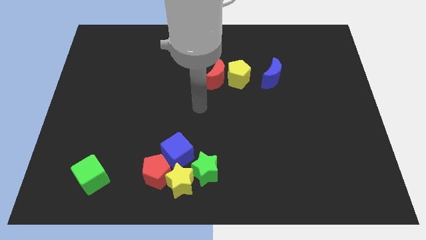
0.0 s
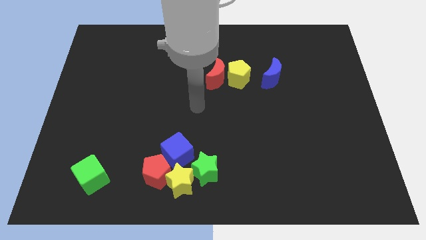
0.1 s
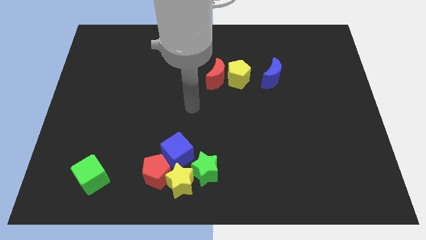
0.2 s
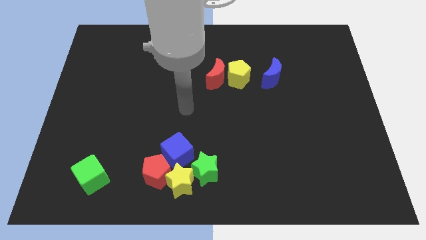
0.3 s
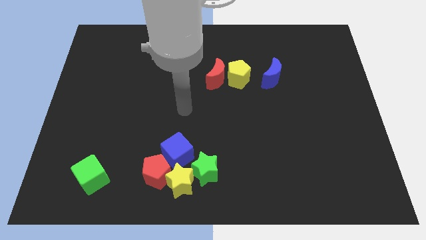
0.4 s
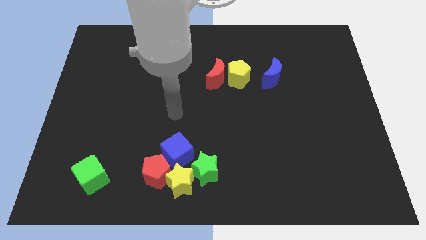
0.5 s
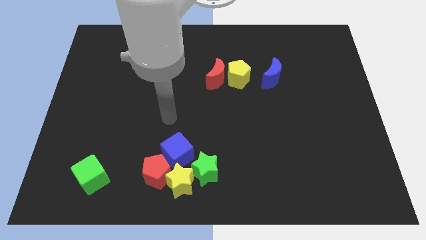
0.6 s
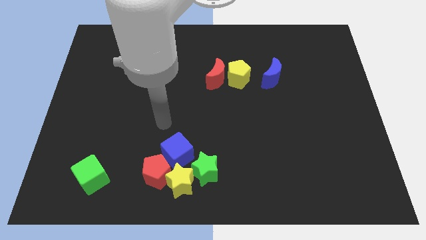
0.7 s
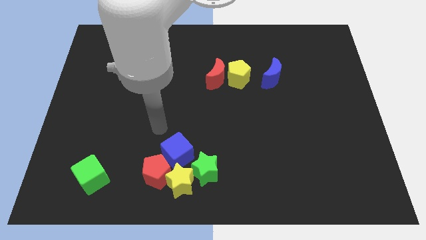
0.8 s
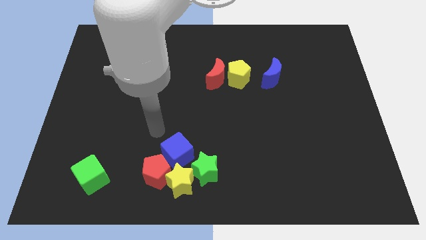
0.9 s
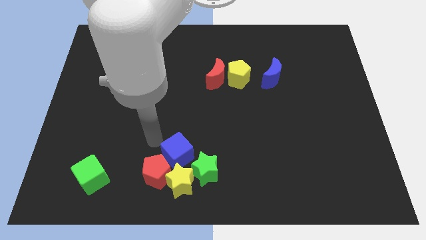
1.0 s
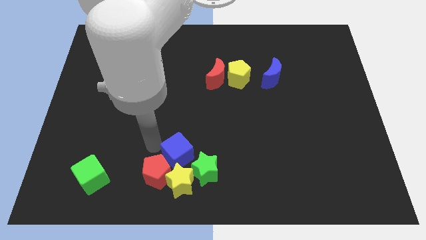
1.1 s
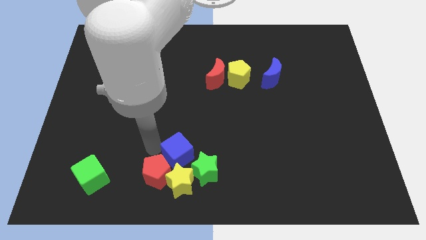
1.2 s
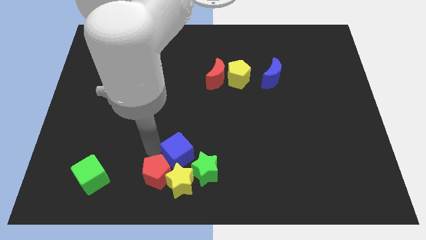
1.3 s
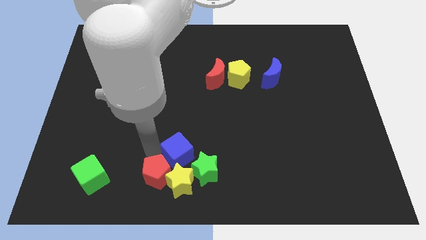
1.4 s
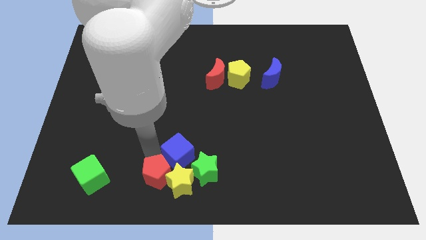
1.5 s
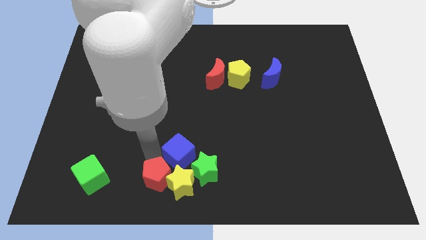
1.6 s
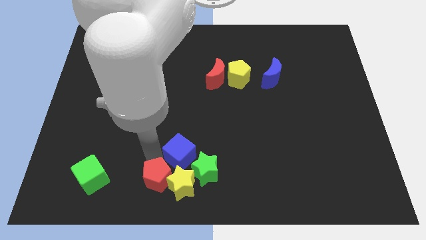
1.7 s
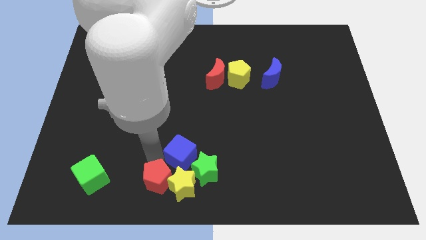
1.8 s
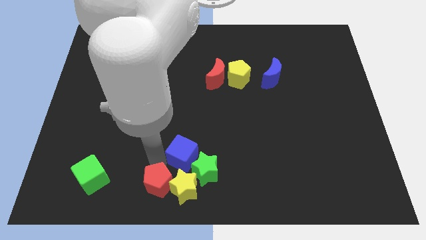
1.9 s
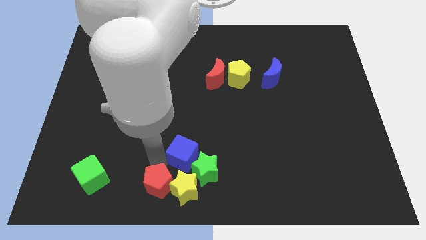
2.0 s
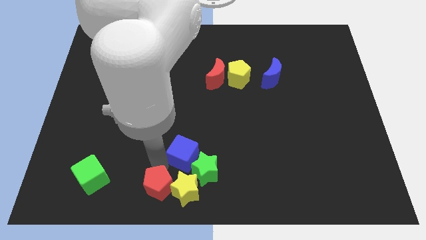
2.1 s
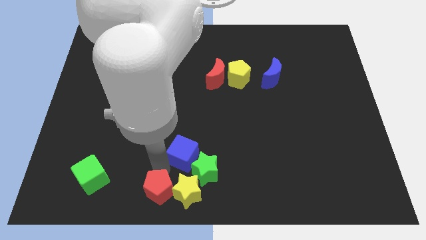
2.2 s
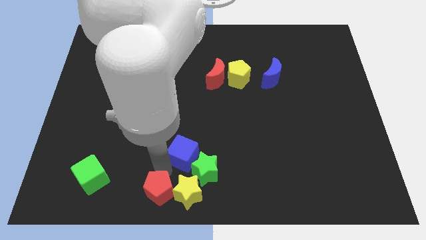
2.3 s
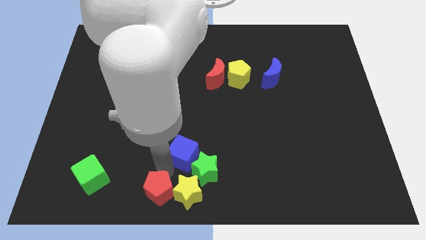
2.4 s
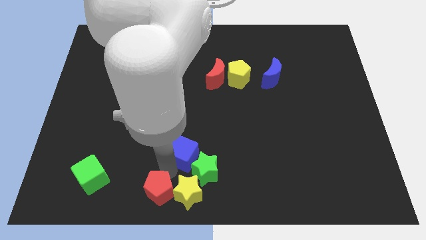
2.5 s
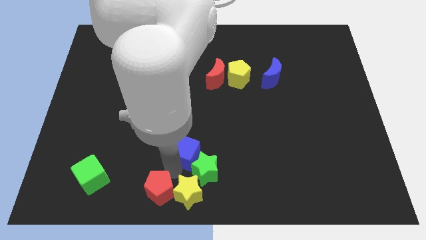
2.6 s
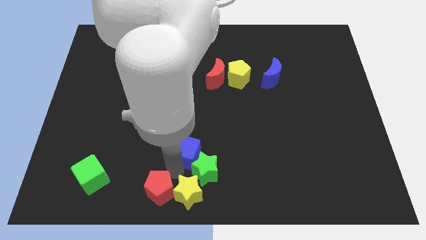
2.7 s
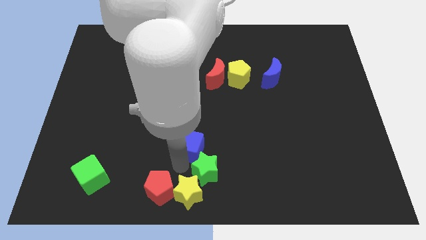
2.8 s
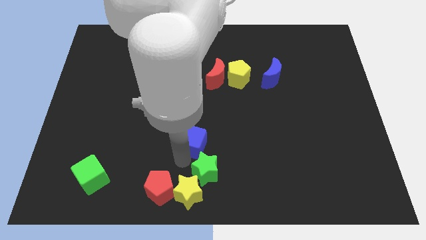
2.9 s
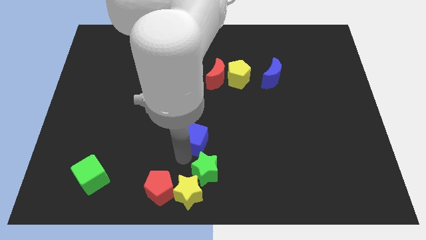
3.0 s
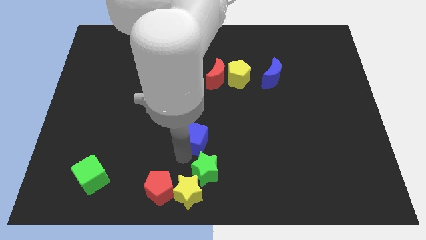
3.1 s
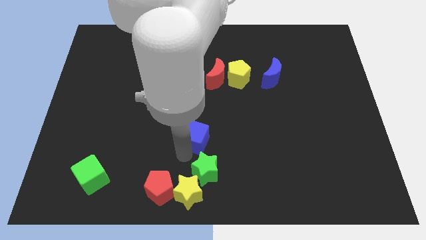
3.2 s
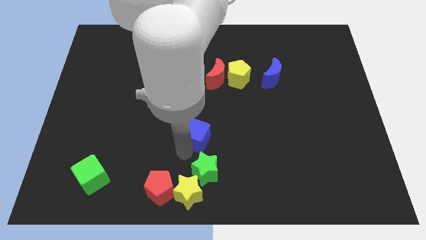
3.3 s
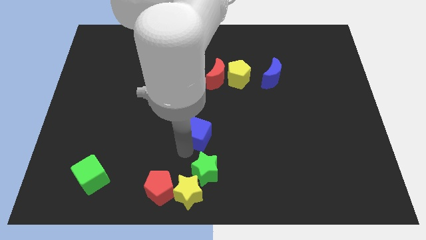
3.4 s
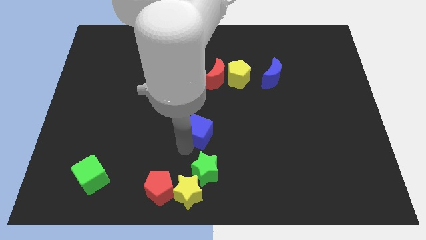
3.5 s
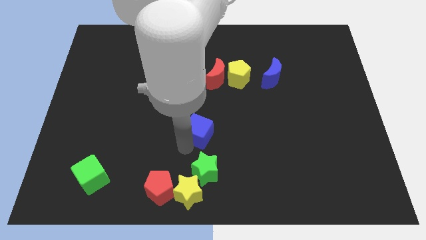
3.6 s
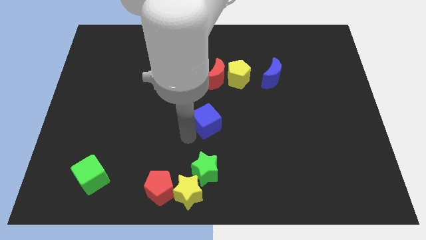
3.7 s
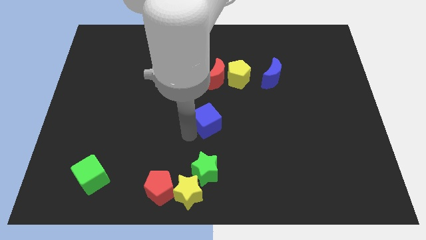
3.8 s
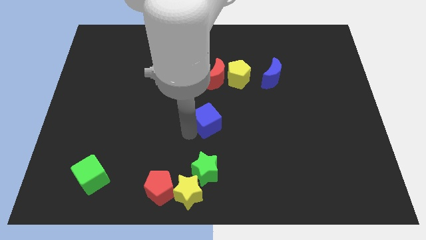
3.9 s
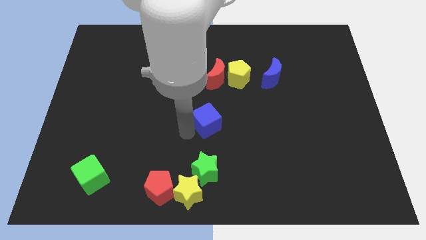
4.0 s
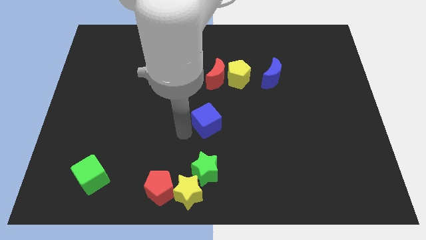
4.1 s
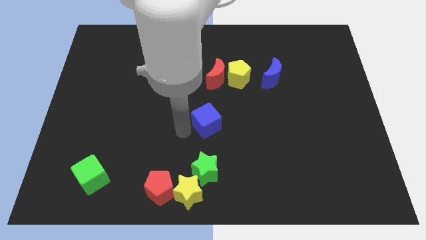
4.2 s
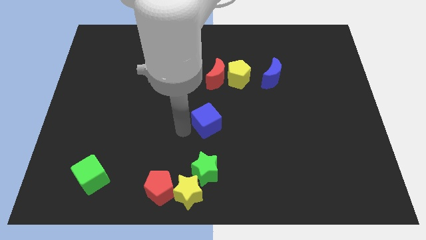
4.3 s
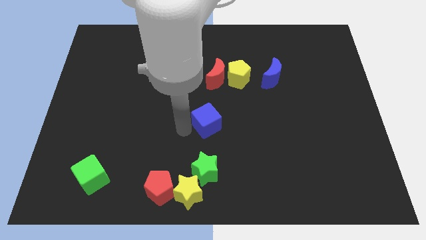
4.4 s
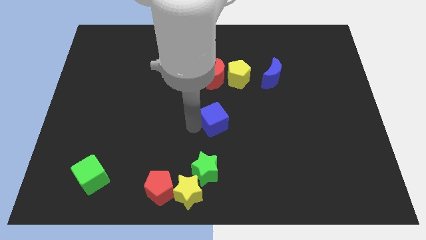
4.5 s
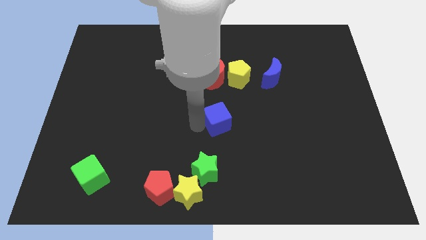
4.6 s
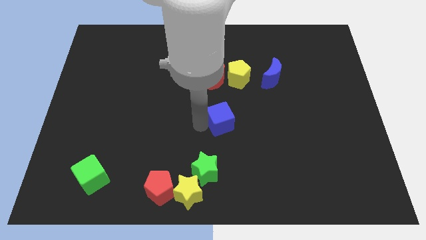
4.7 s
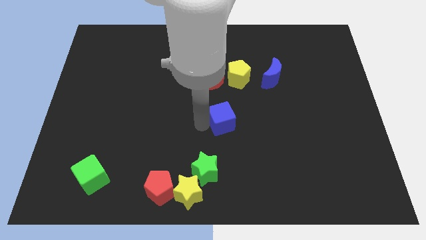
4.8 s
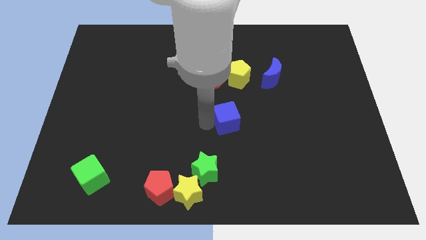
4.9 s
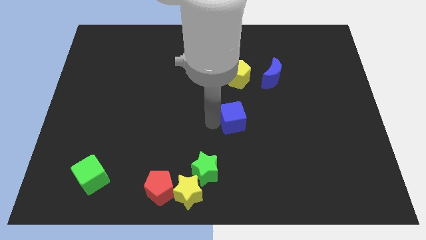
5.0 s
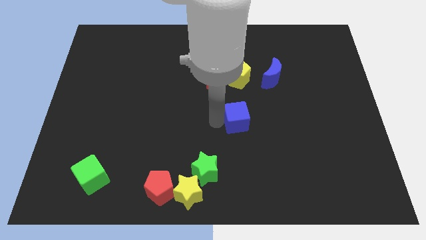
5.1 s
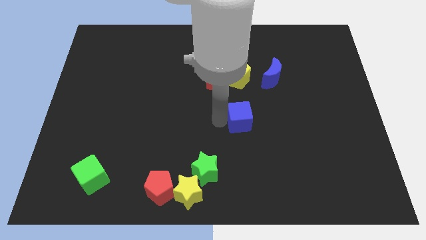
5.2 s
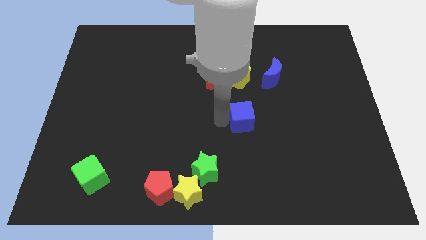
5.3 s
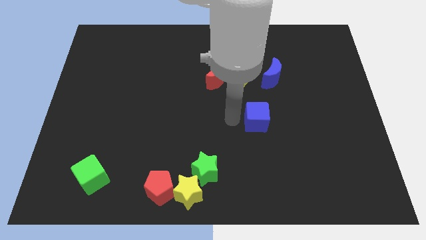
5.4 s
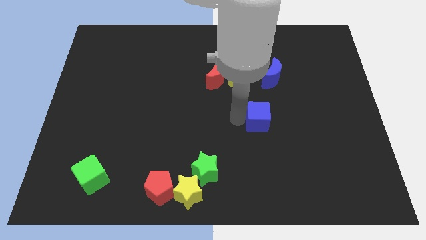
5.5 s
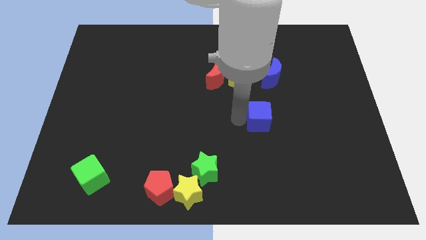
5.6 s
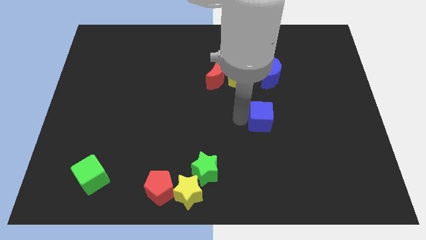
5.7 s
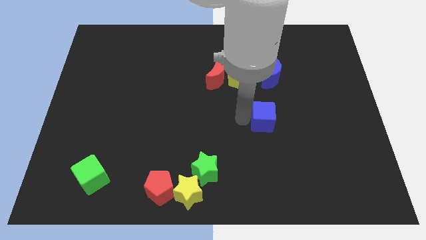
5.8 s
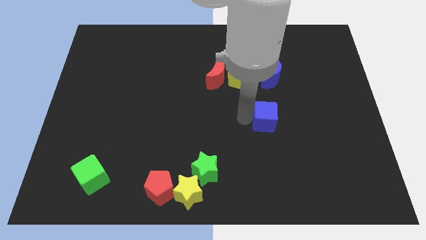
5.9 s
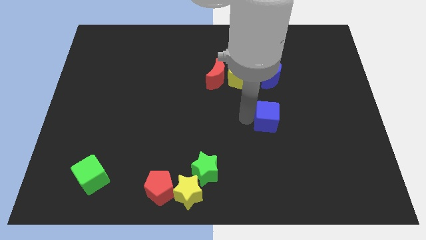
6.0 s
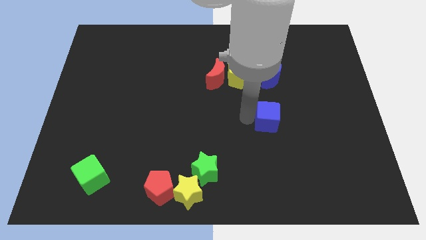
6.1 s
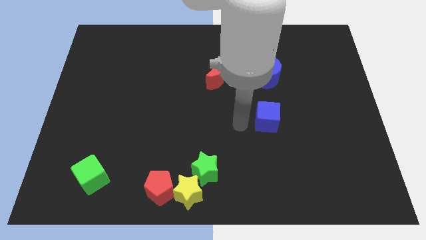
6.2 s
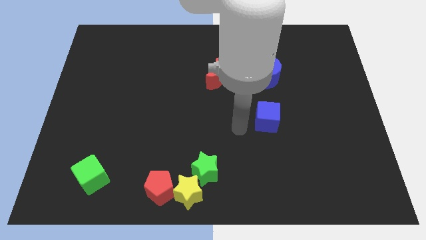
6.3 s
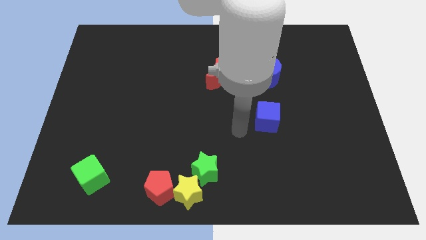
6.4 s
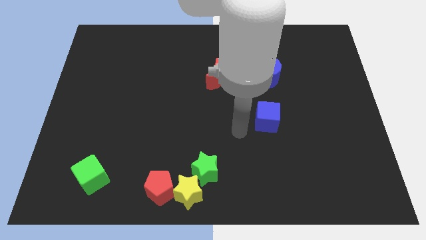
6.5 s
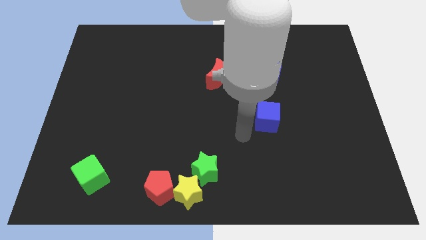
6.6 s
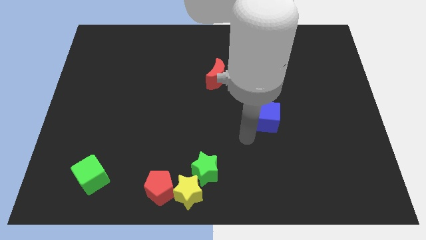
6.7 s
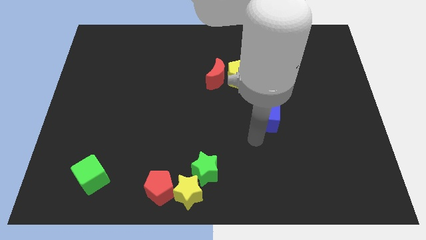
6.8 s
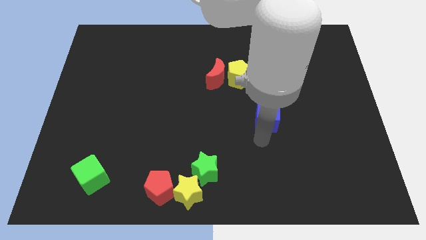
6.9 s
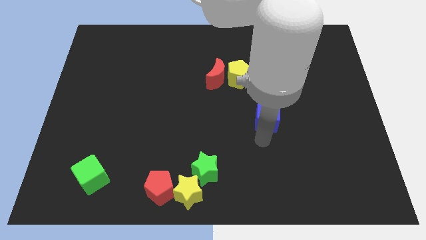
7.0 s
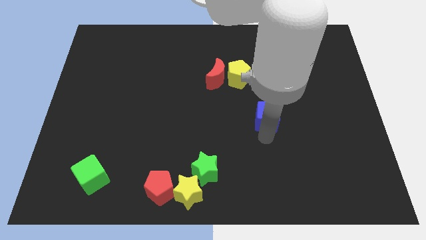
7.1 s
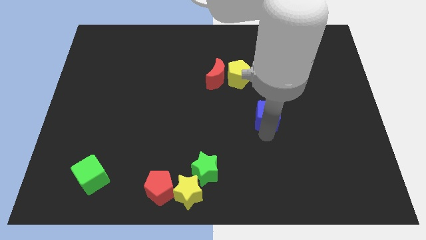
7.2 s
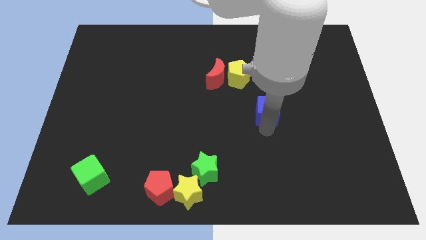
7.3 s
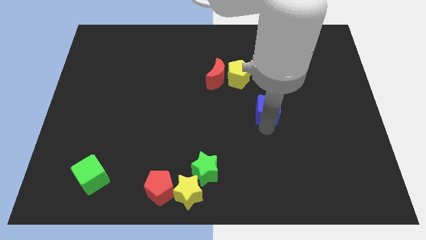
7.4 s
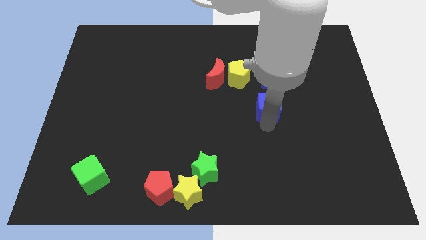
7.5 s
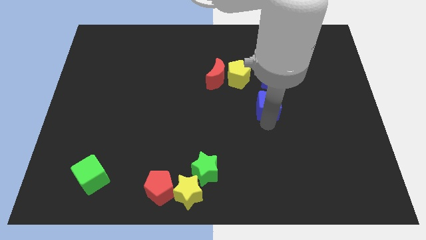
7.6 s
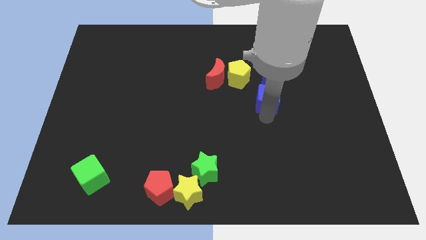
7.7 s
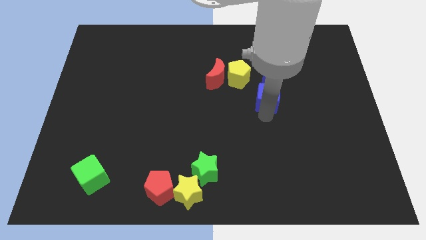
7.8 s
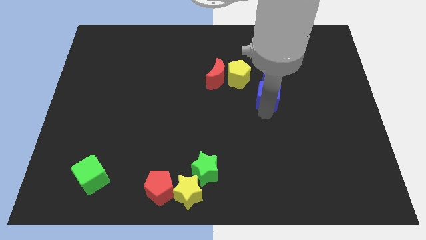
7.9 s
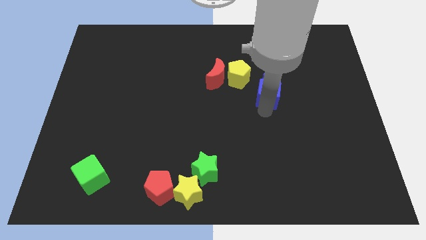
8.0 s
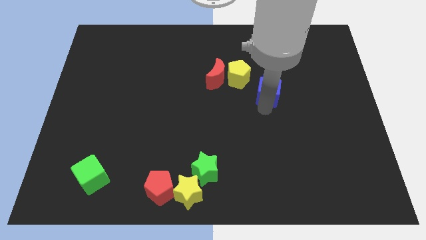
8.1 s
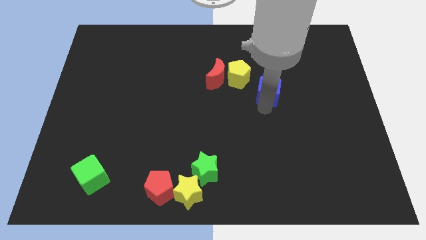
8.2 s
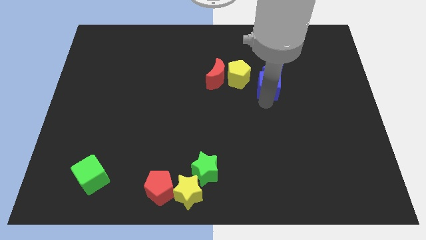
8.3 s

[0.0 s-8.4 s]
put the blue cube to the blue moon
